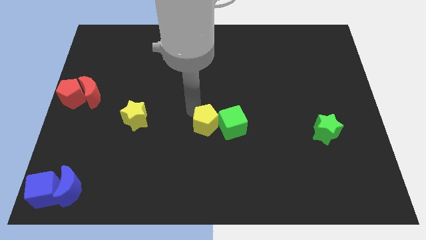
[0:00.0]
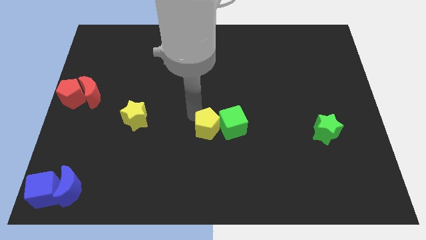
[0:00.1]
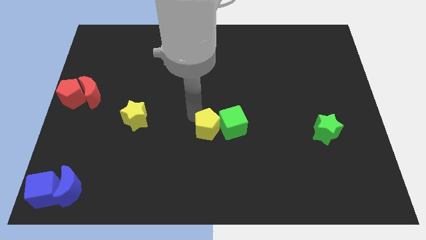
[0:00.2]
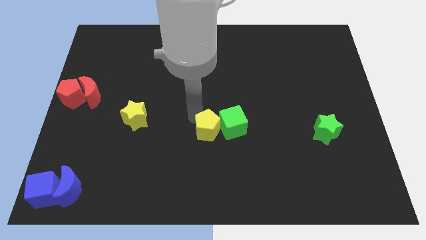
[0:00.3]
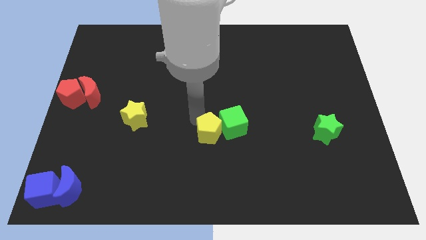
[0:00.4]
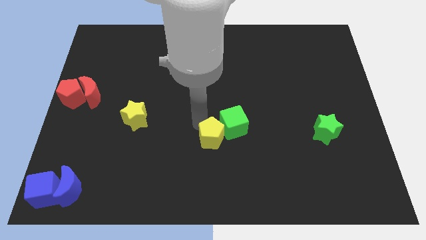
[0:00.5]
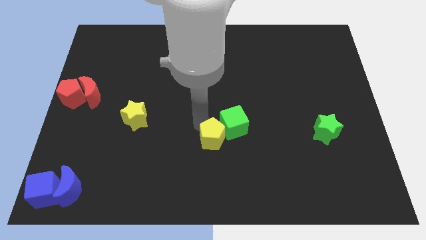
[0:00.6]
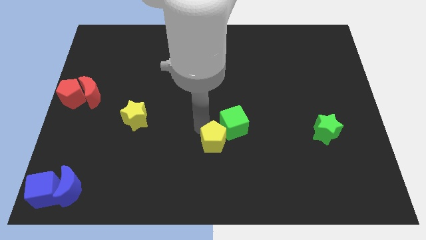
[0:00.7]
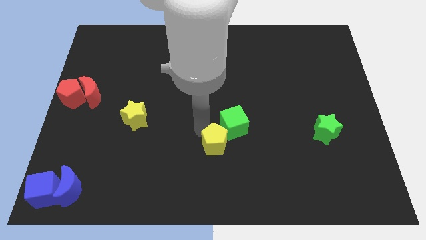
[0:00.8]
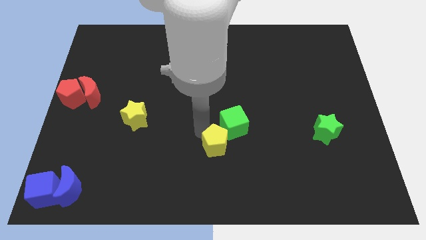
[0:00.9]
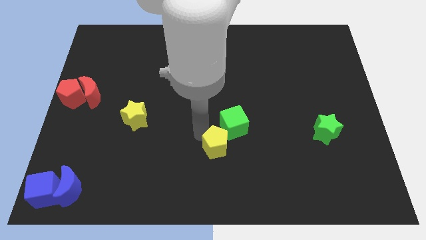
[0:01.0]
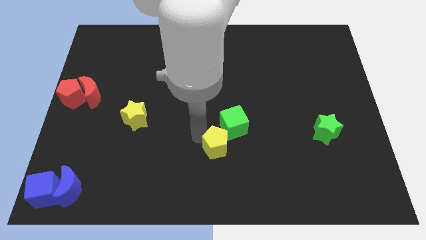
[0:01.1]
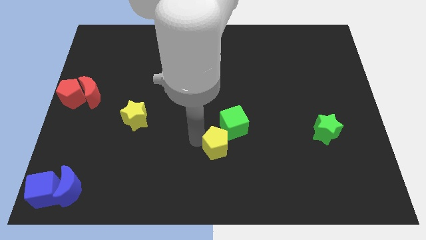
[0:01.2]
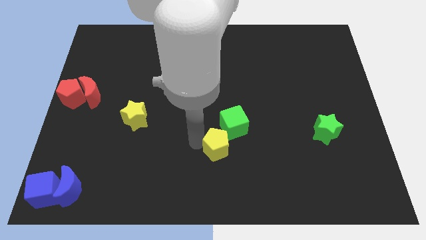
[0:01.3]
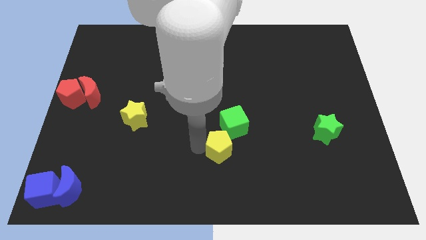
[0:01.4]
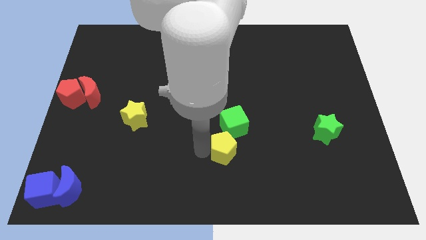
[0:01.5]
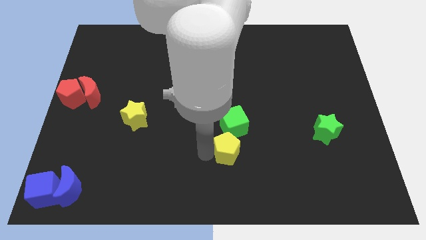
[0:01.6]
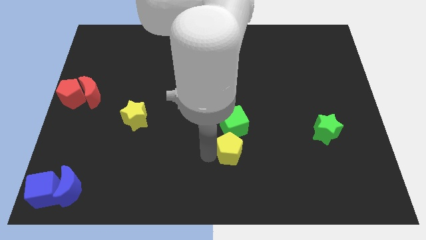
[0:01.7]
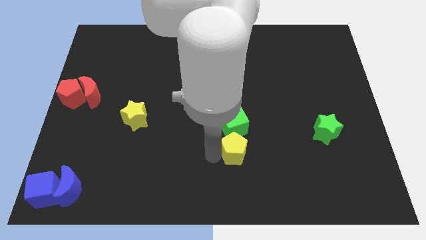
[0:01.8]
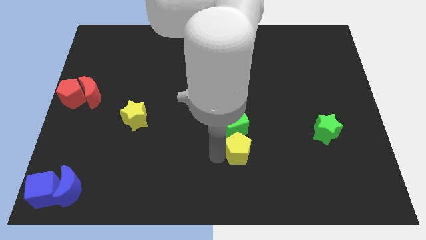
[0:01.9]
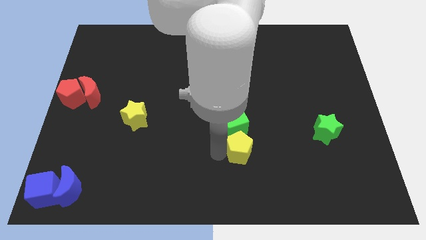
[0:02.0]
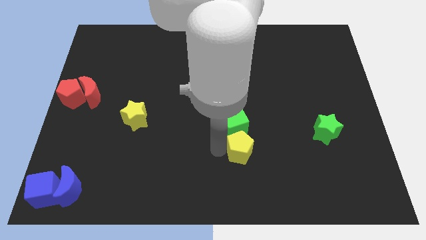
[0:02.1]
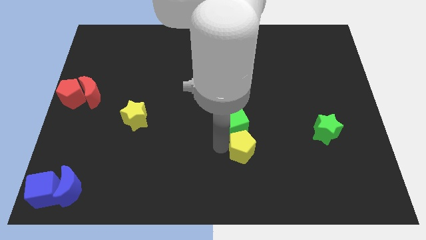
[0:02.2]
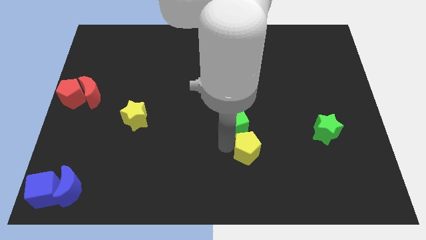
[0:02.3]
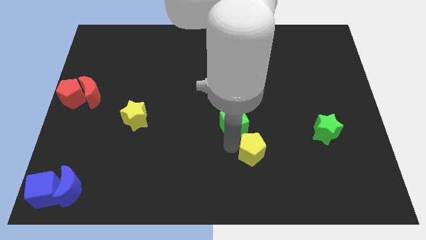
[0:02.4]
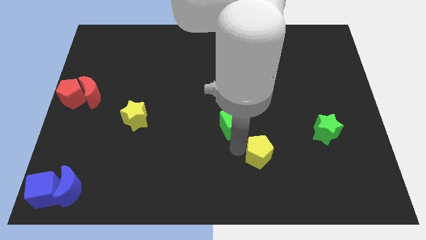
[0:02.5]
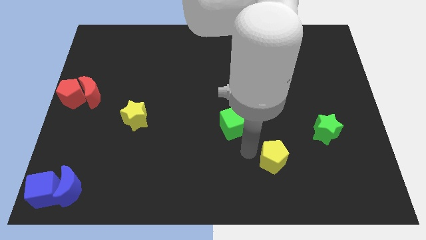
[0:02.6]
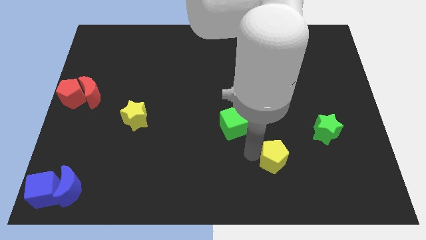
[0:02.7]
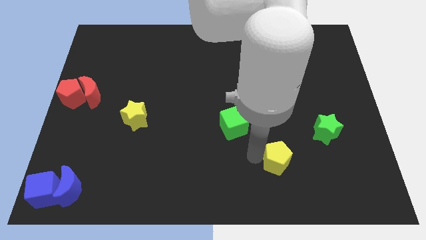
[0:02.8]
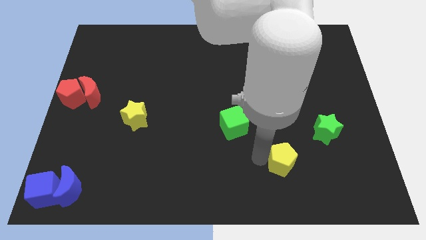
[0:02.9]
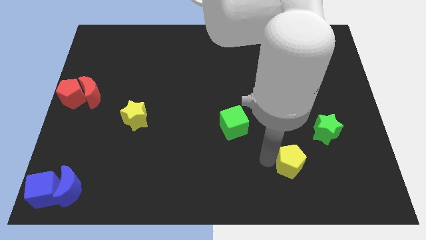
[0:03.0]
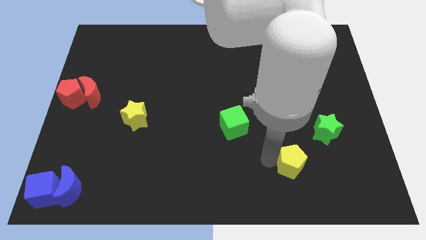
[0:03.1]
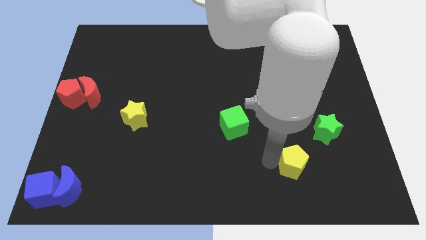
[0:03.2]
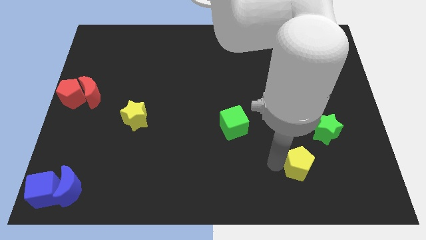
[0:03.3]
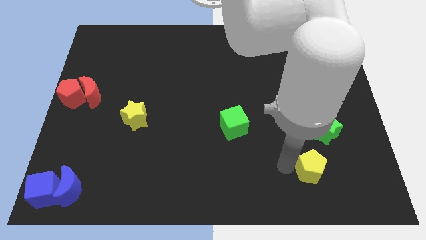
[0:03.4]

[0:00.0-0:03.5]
separate the green cube and yellow pentagon

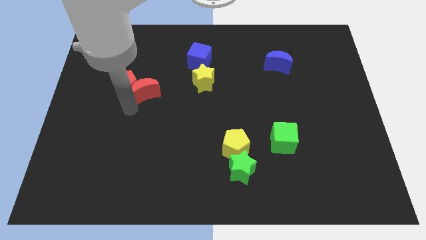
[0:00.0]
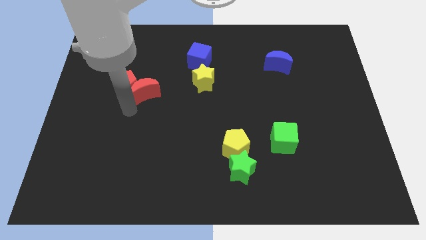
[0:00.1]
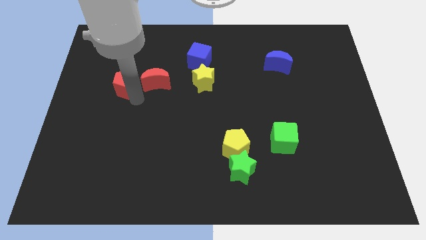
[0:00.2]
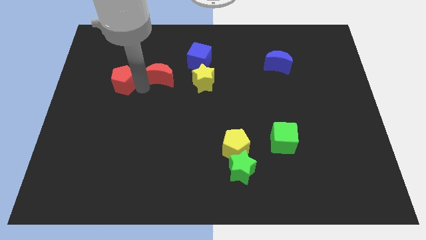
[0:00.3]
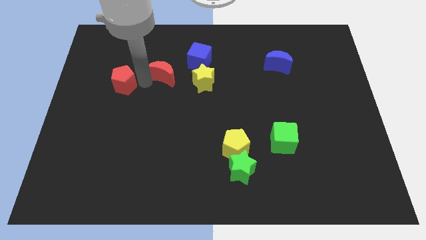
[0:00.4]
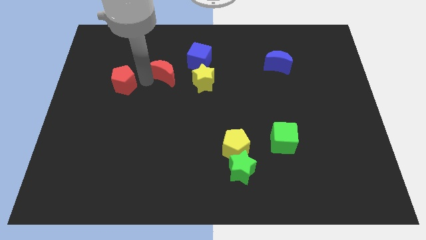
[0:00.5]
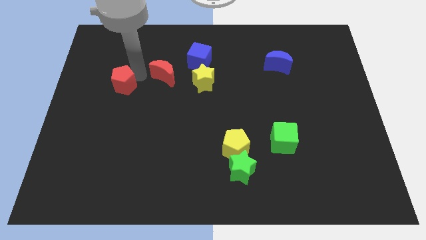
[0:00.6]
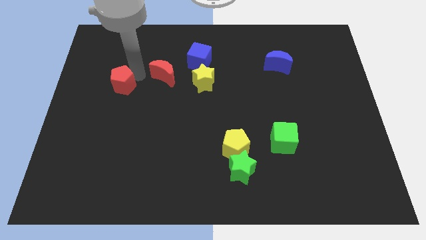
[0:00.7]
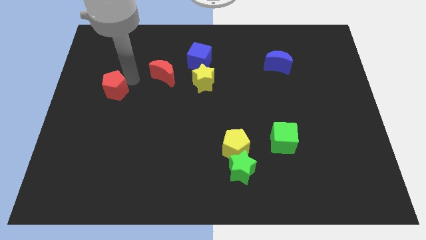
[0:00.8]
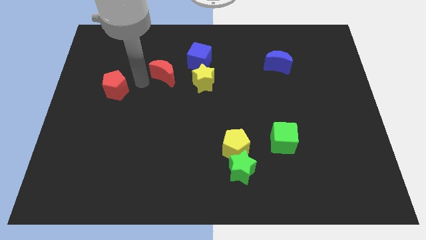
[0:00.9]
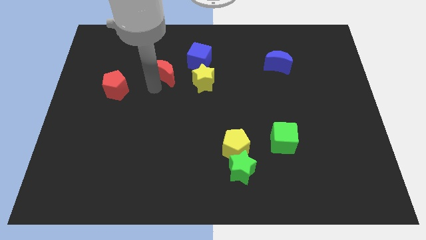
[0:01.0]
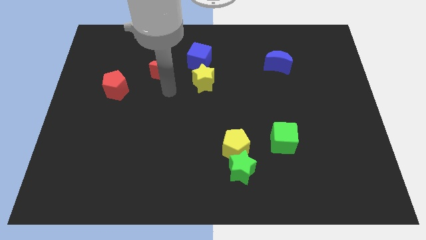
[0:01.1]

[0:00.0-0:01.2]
separate the red moon from red pentagon

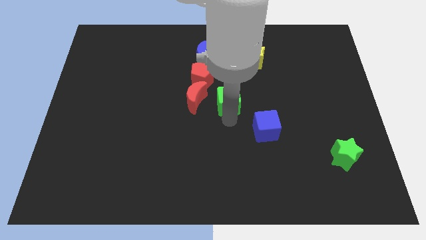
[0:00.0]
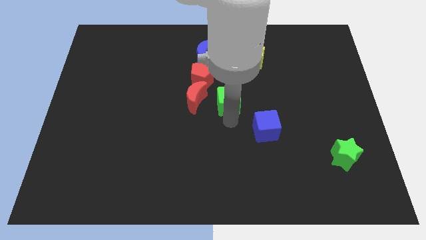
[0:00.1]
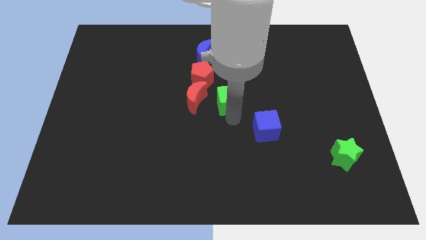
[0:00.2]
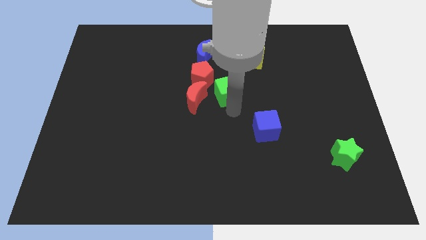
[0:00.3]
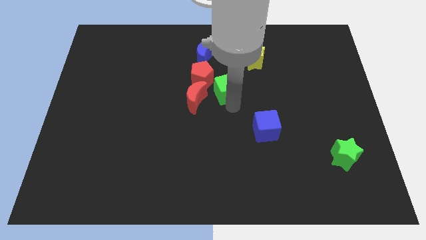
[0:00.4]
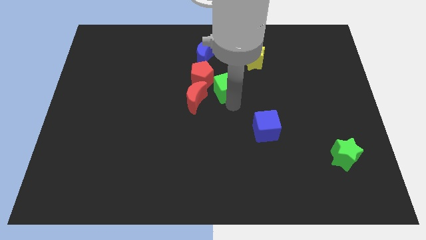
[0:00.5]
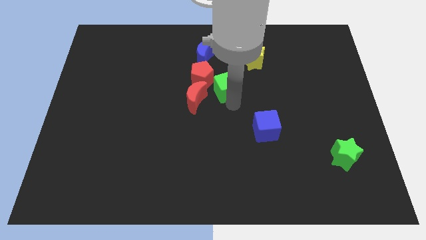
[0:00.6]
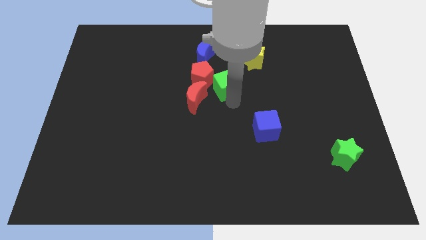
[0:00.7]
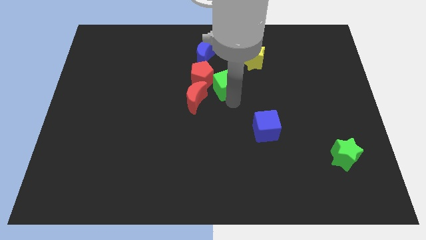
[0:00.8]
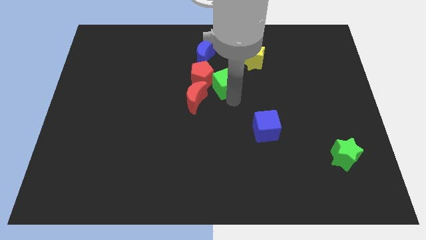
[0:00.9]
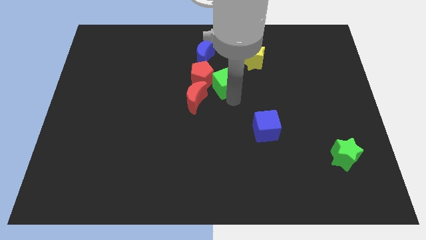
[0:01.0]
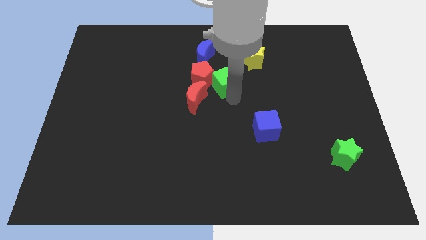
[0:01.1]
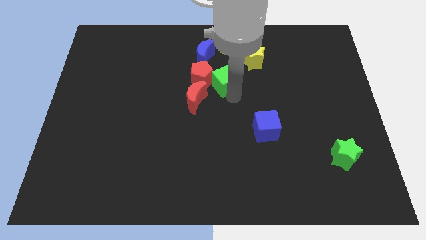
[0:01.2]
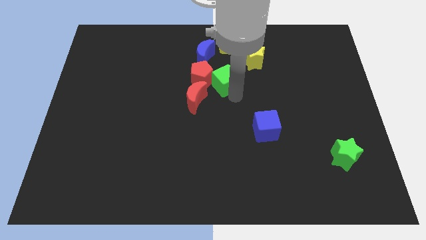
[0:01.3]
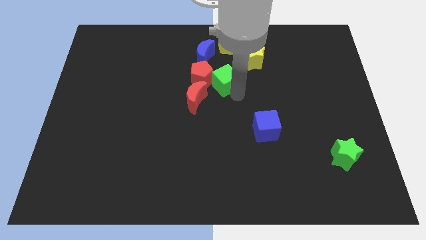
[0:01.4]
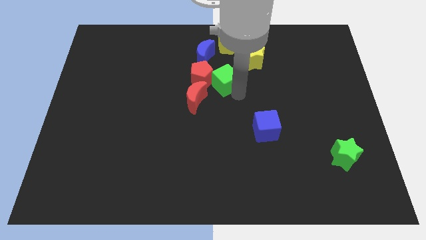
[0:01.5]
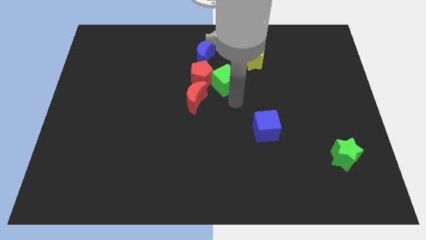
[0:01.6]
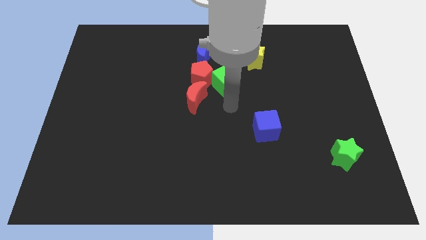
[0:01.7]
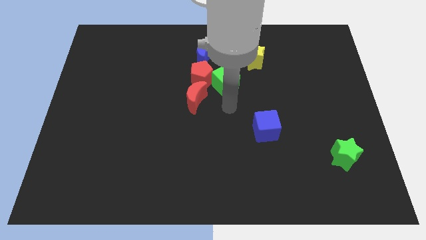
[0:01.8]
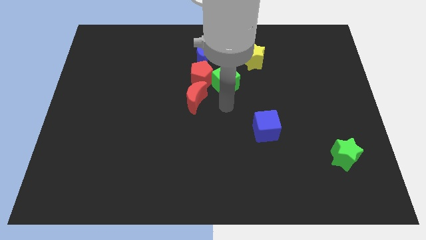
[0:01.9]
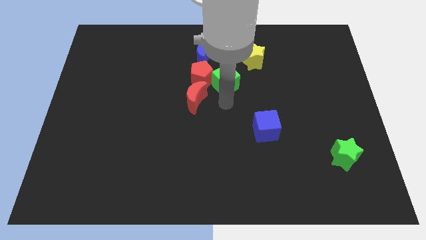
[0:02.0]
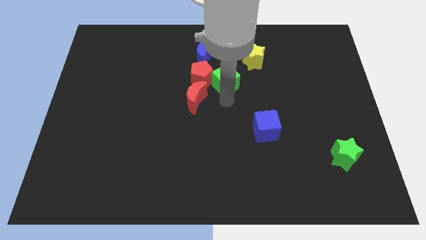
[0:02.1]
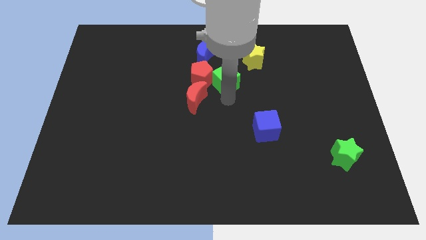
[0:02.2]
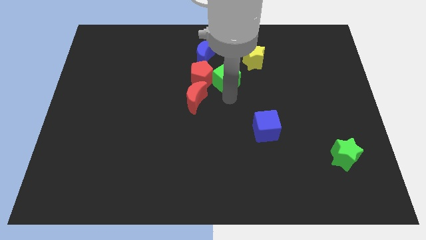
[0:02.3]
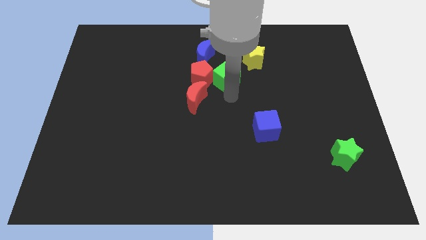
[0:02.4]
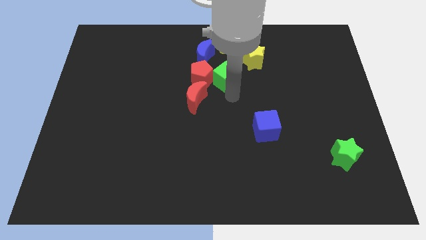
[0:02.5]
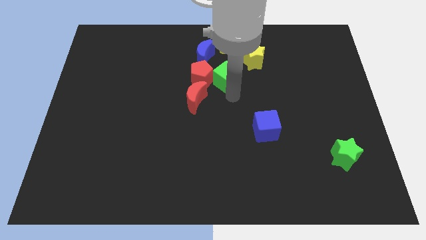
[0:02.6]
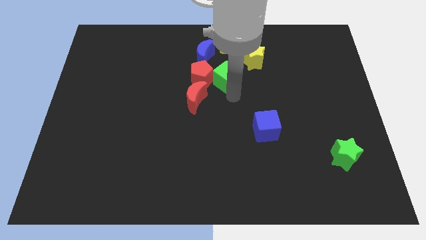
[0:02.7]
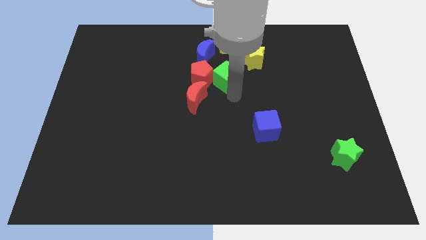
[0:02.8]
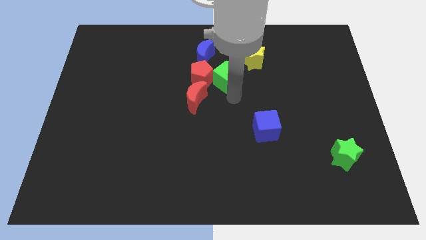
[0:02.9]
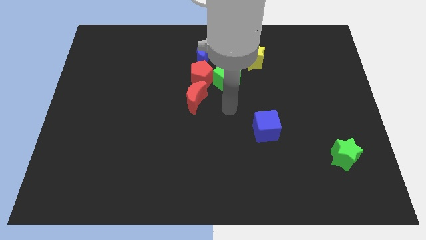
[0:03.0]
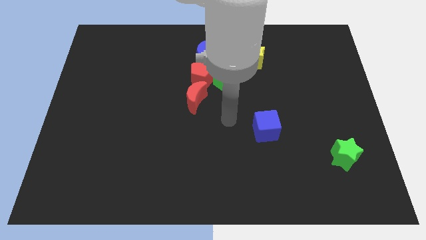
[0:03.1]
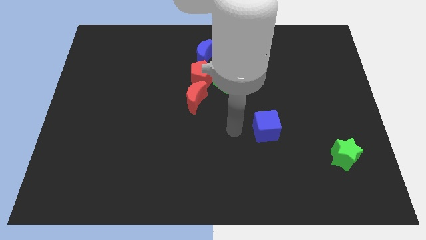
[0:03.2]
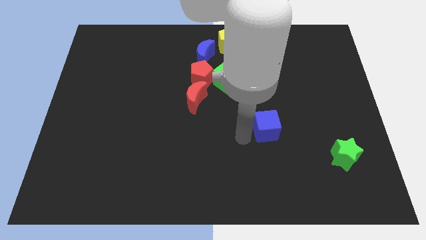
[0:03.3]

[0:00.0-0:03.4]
place the green square at the center of the board

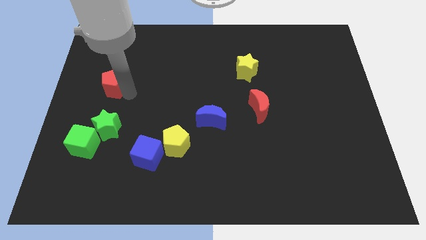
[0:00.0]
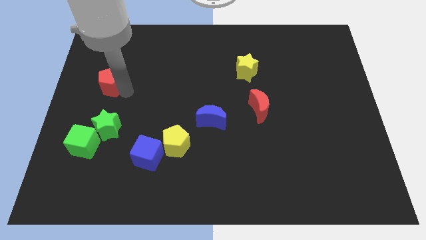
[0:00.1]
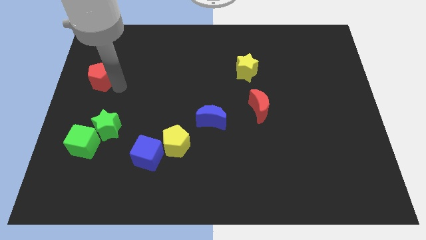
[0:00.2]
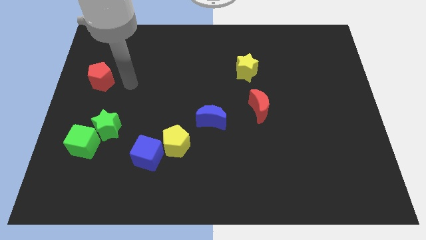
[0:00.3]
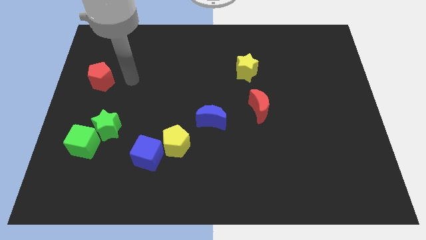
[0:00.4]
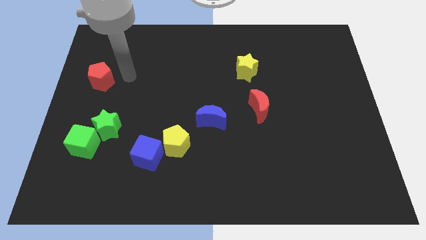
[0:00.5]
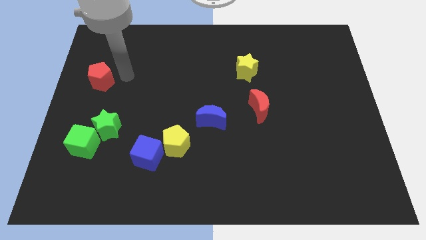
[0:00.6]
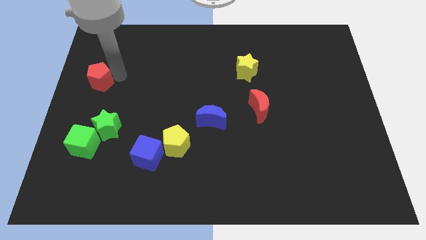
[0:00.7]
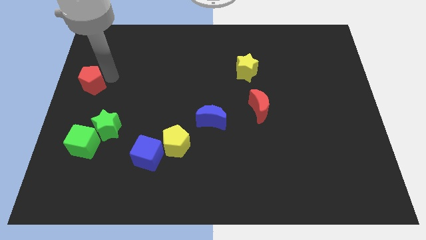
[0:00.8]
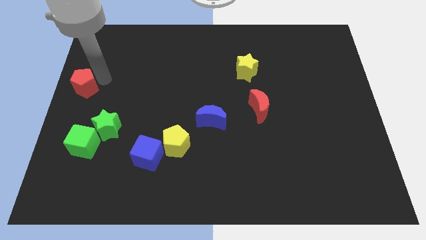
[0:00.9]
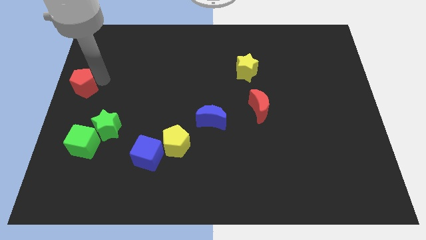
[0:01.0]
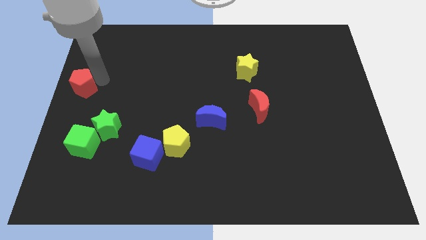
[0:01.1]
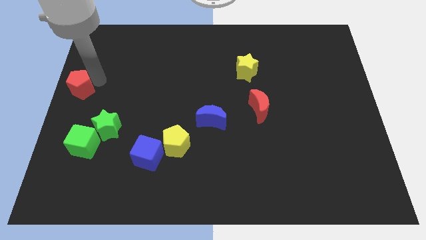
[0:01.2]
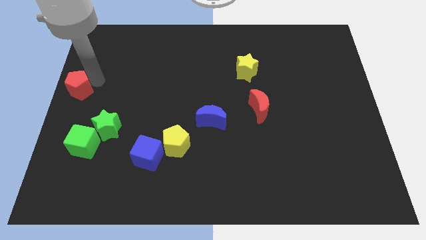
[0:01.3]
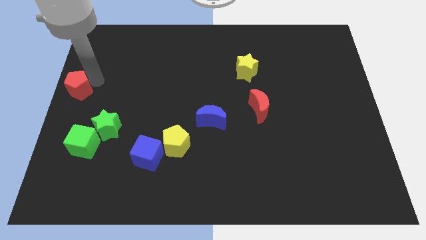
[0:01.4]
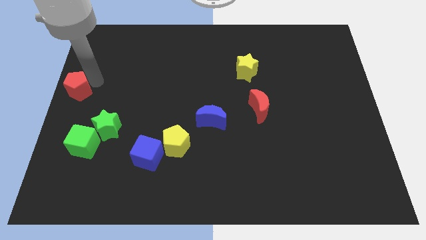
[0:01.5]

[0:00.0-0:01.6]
move the red pentagon vertical to the green star
